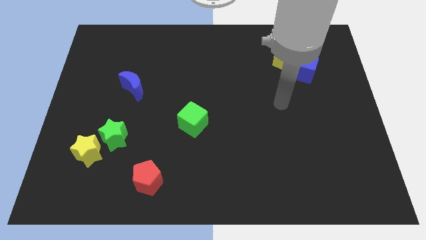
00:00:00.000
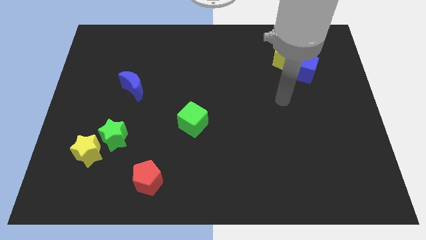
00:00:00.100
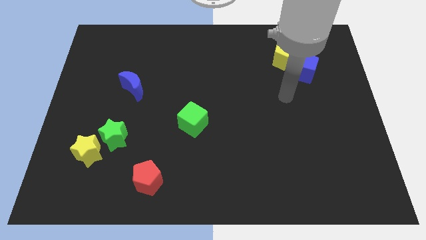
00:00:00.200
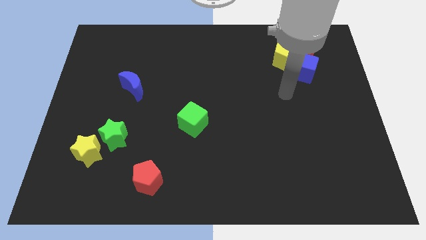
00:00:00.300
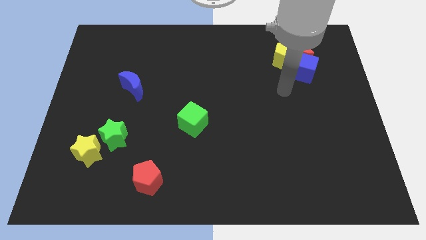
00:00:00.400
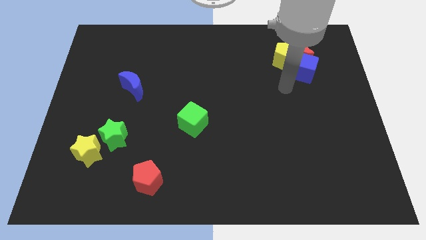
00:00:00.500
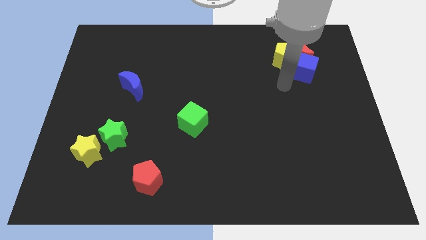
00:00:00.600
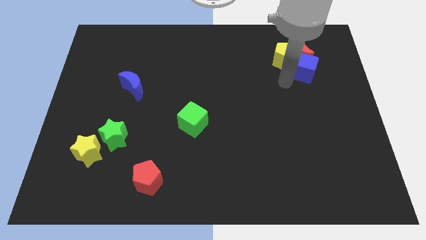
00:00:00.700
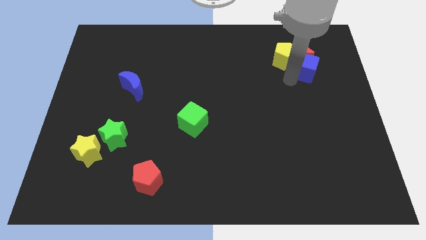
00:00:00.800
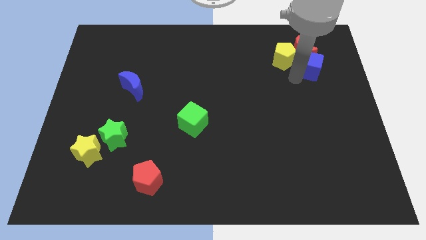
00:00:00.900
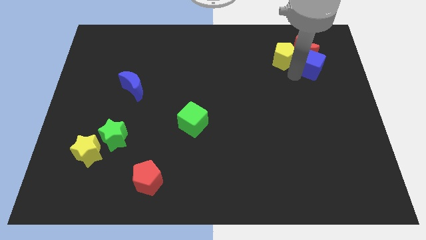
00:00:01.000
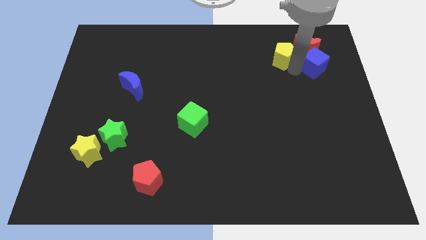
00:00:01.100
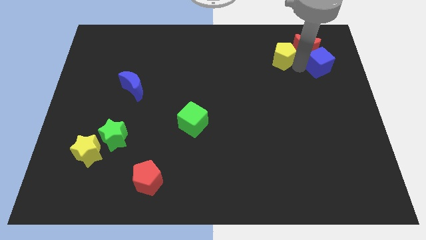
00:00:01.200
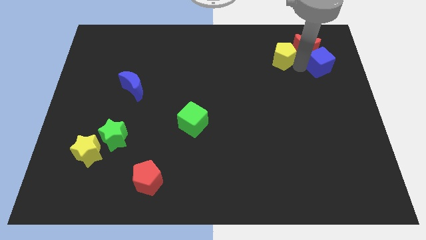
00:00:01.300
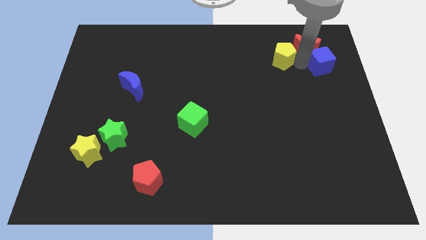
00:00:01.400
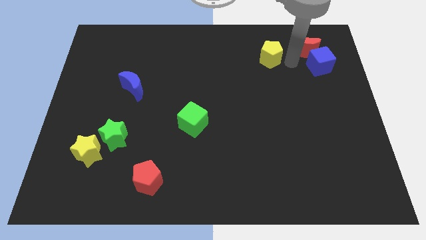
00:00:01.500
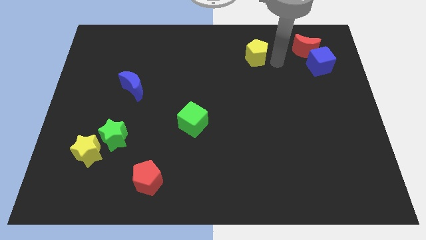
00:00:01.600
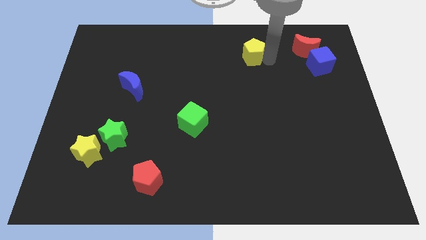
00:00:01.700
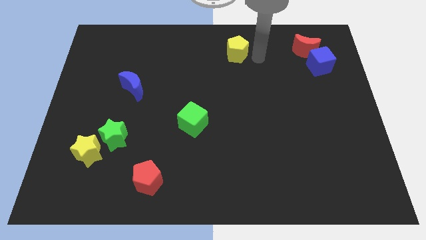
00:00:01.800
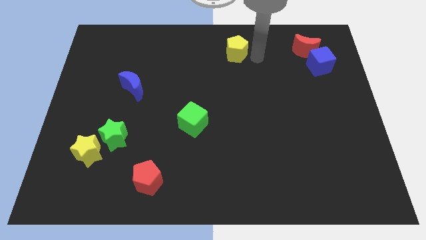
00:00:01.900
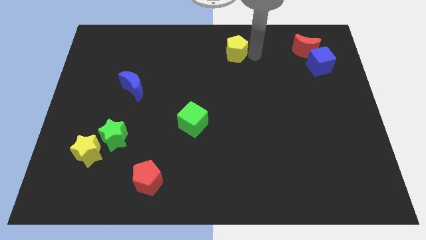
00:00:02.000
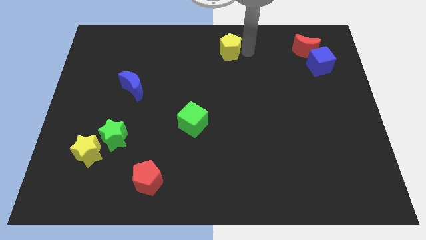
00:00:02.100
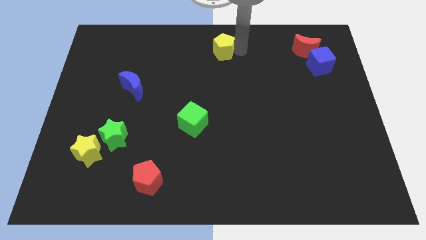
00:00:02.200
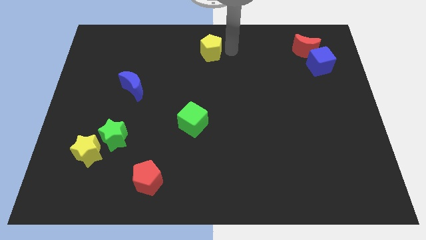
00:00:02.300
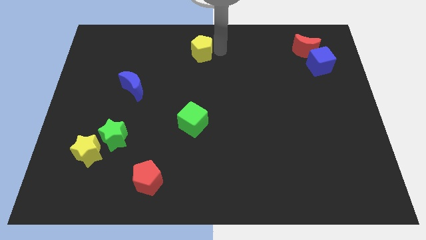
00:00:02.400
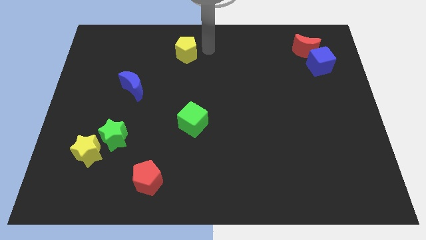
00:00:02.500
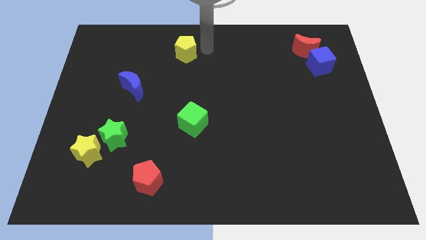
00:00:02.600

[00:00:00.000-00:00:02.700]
move yellow pentagon slightly left

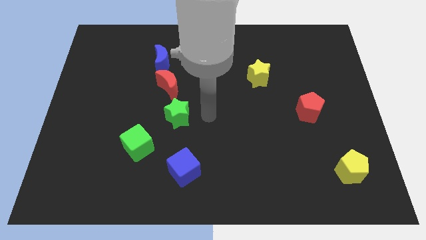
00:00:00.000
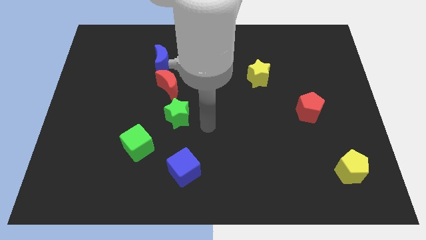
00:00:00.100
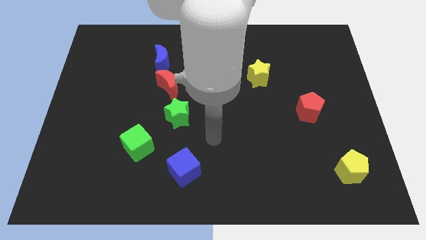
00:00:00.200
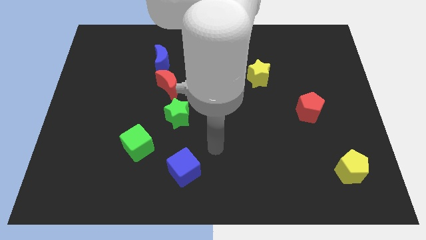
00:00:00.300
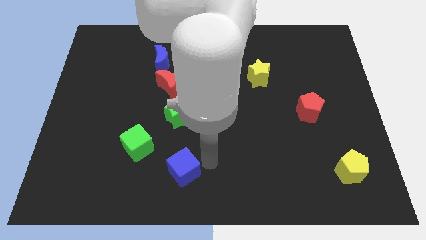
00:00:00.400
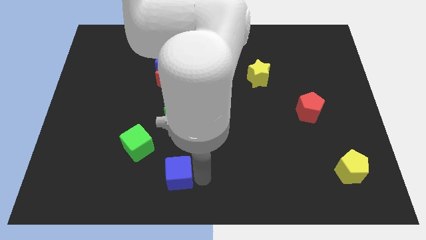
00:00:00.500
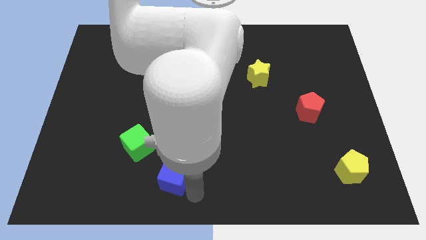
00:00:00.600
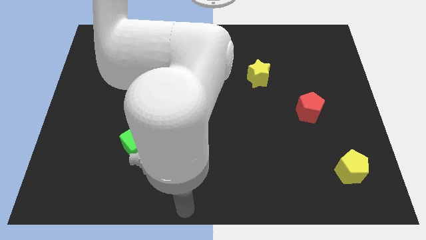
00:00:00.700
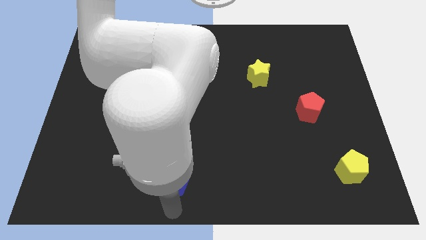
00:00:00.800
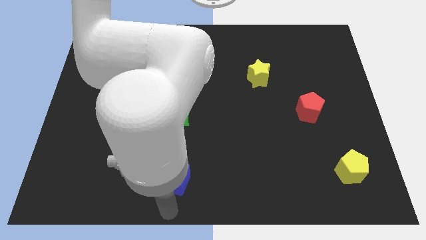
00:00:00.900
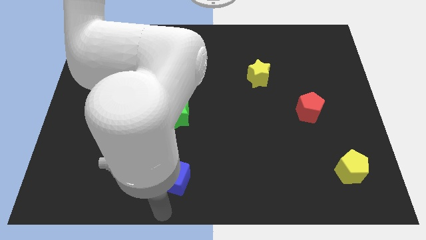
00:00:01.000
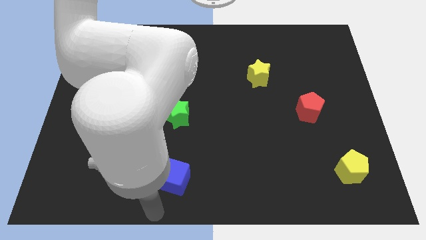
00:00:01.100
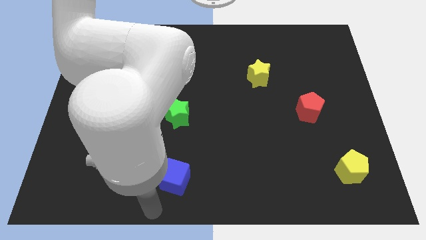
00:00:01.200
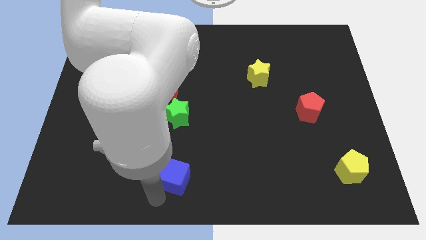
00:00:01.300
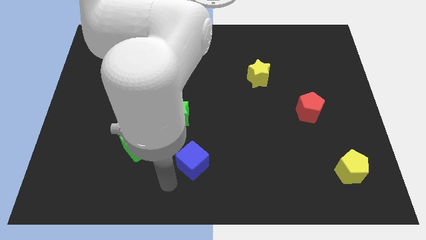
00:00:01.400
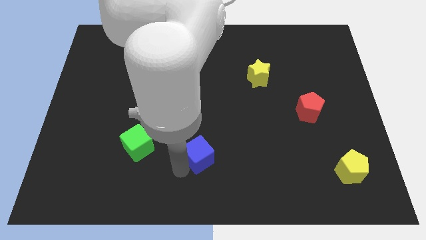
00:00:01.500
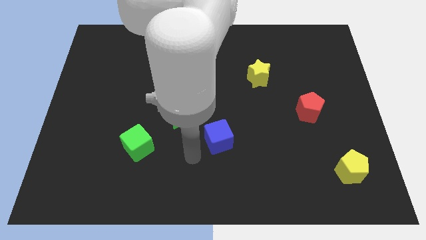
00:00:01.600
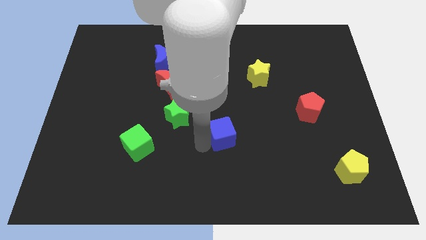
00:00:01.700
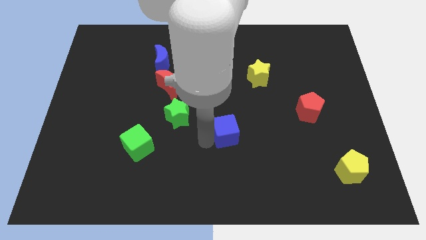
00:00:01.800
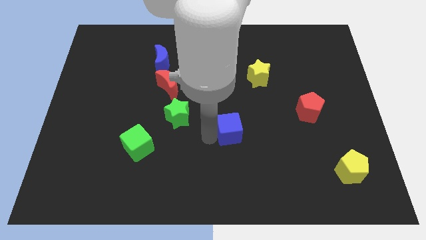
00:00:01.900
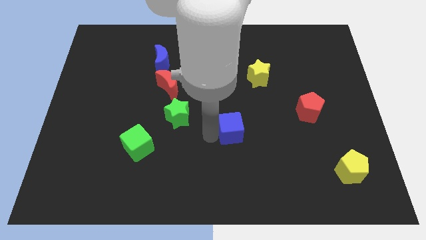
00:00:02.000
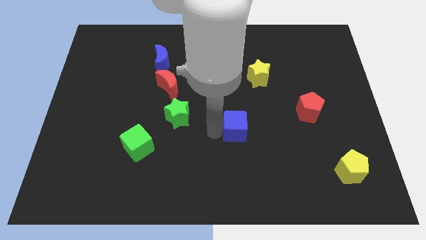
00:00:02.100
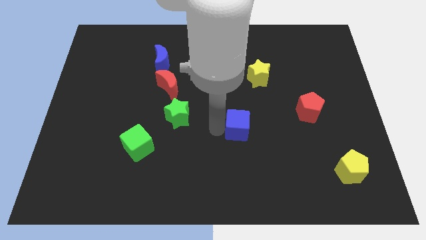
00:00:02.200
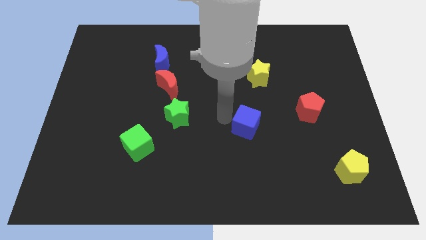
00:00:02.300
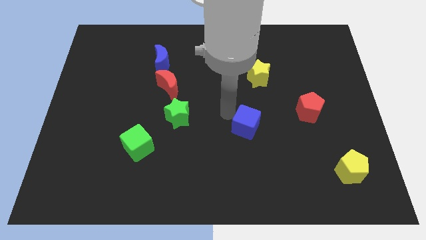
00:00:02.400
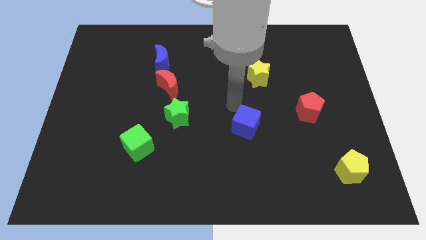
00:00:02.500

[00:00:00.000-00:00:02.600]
place the blue cube right to the green star

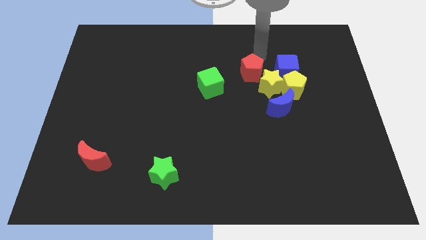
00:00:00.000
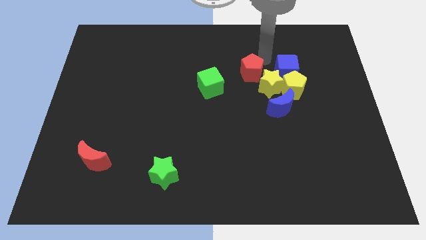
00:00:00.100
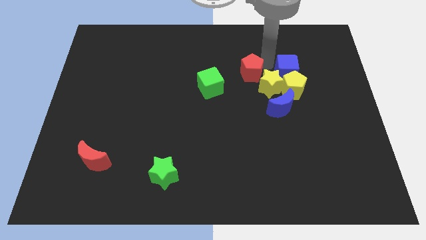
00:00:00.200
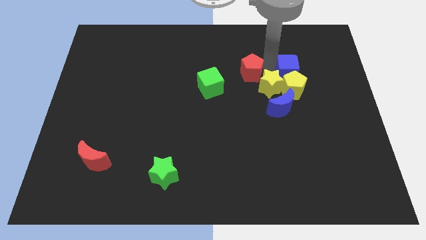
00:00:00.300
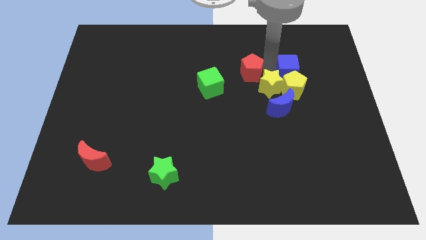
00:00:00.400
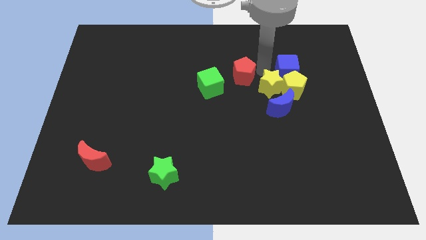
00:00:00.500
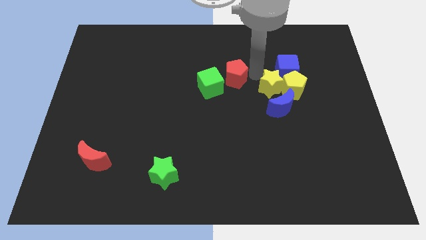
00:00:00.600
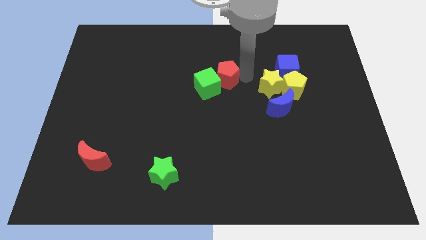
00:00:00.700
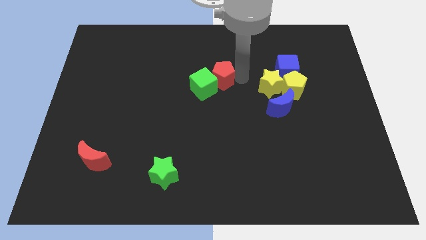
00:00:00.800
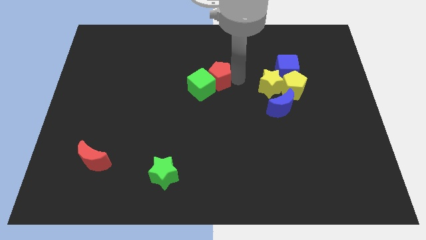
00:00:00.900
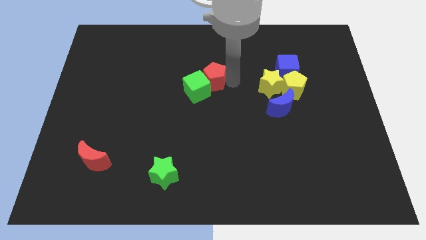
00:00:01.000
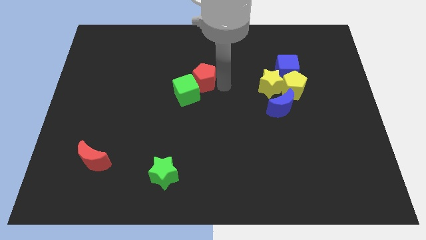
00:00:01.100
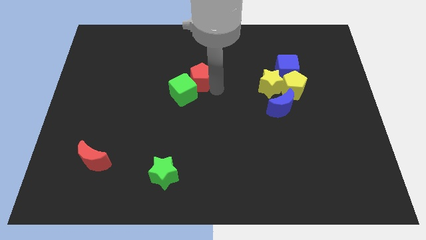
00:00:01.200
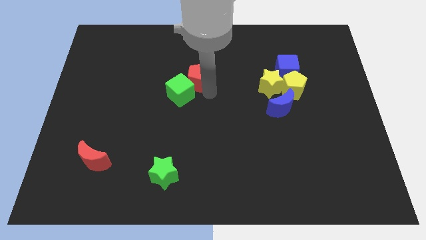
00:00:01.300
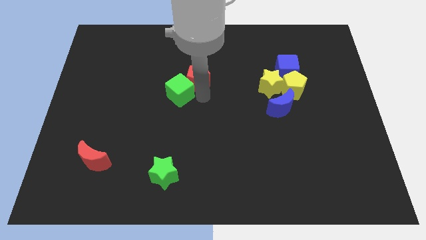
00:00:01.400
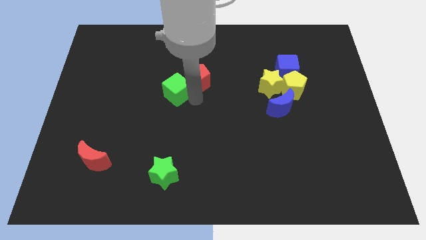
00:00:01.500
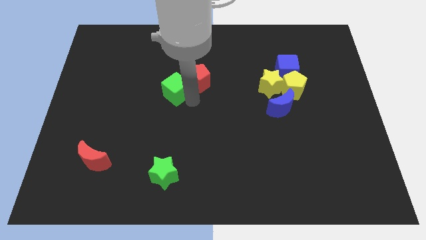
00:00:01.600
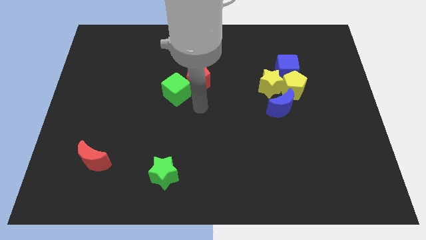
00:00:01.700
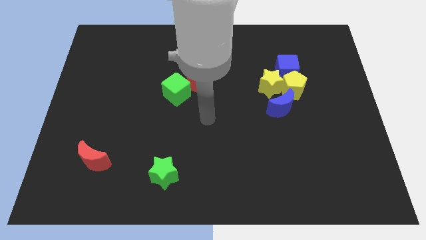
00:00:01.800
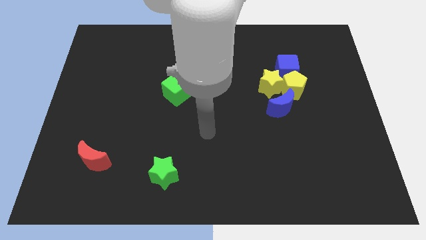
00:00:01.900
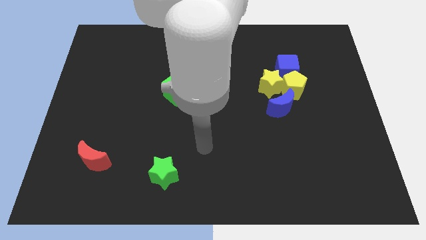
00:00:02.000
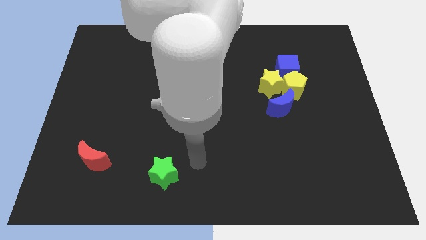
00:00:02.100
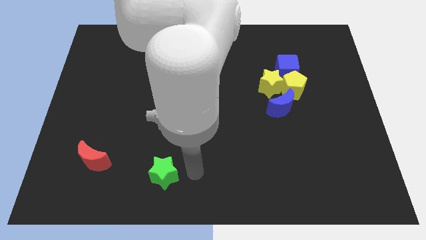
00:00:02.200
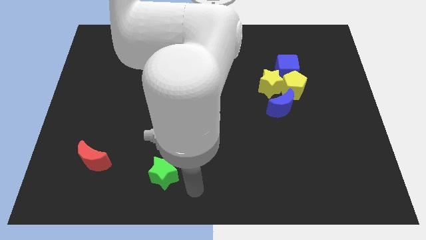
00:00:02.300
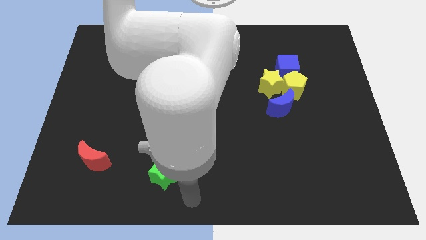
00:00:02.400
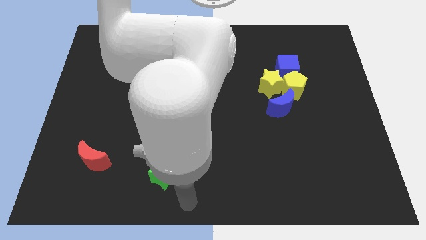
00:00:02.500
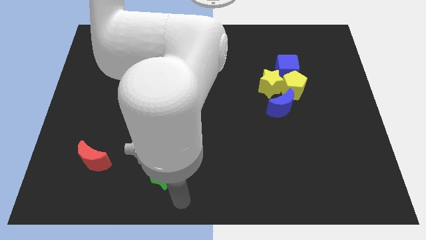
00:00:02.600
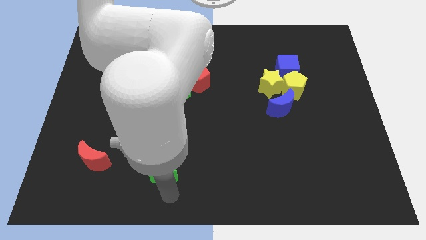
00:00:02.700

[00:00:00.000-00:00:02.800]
push the red pentagon into the green cube

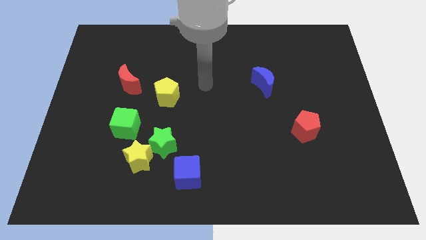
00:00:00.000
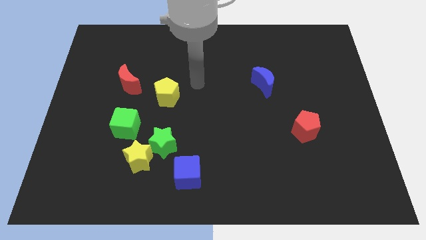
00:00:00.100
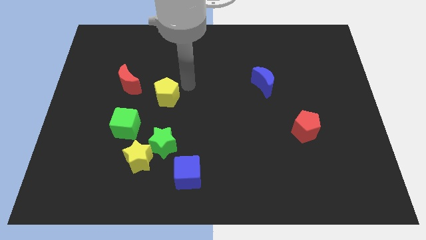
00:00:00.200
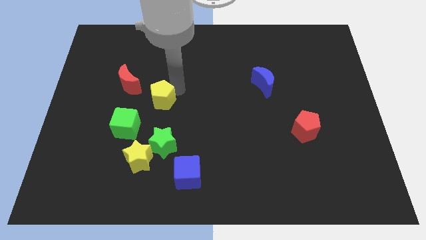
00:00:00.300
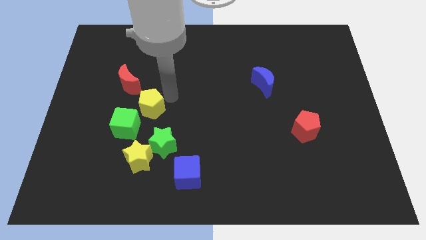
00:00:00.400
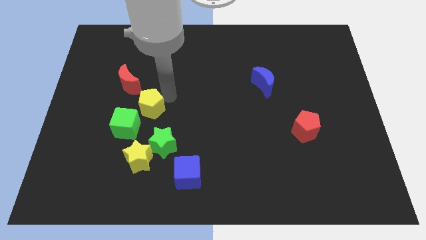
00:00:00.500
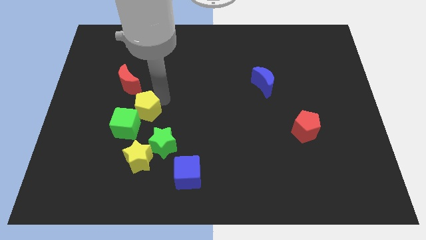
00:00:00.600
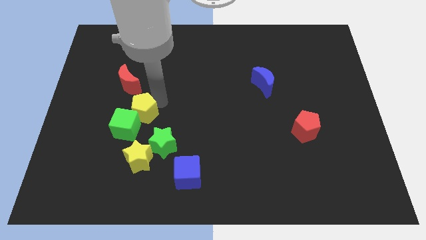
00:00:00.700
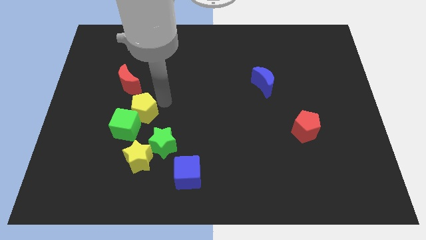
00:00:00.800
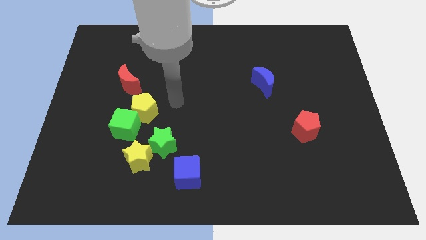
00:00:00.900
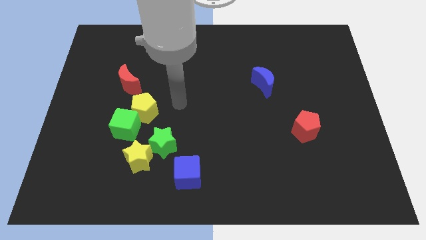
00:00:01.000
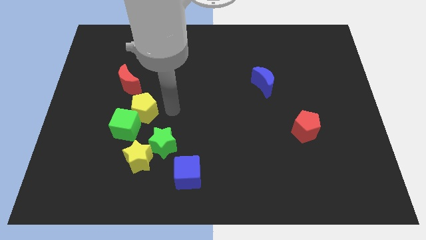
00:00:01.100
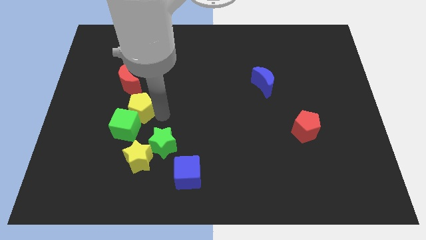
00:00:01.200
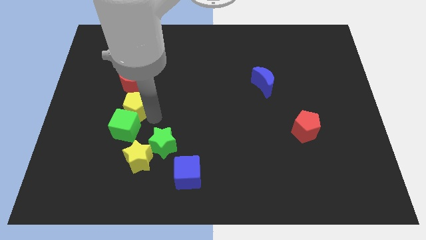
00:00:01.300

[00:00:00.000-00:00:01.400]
push the yellow pentagon into the green cube
